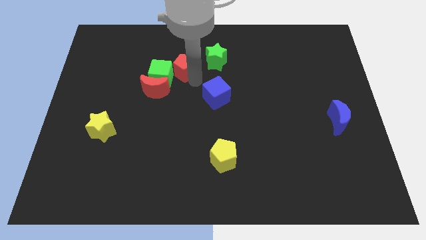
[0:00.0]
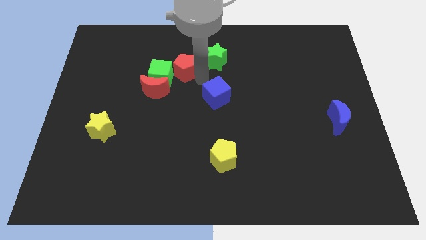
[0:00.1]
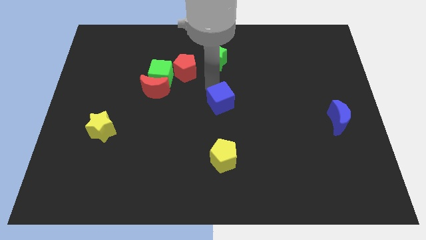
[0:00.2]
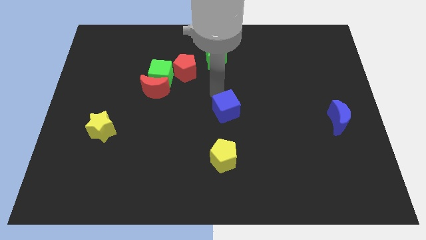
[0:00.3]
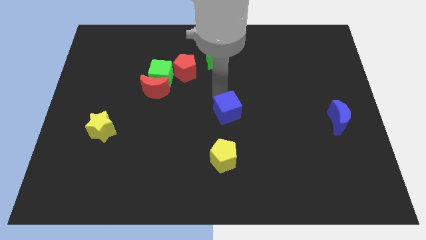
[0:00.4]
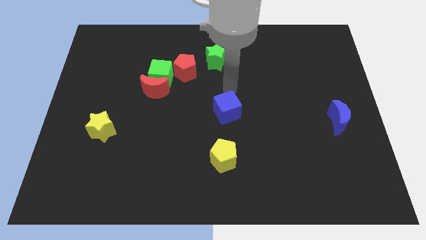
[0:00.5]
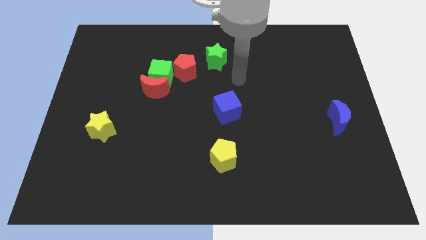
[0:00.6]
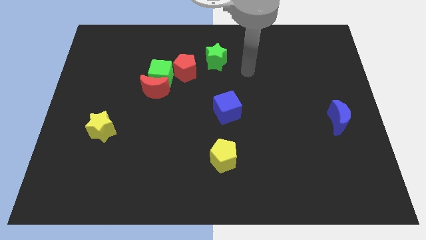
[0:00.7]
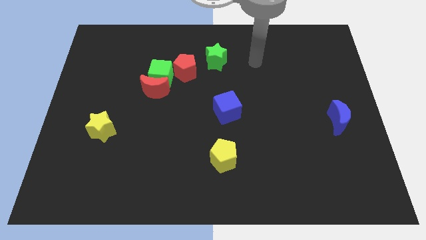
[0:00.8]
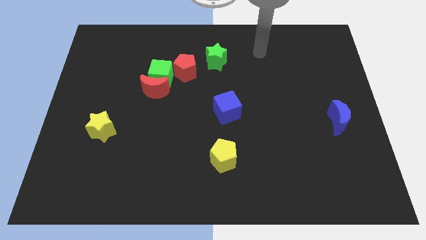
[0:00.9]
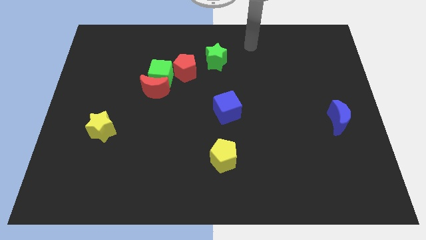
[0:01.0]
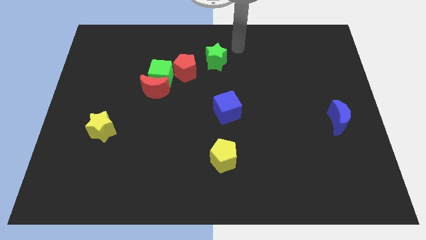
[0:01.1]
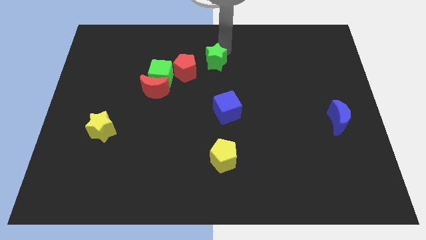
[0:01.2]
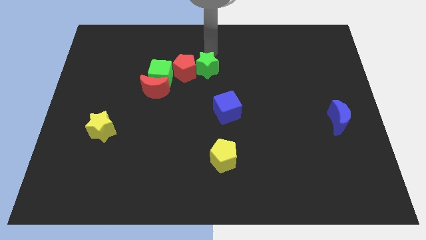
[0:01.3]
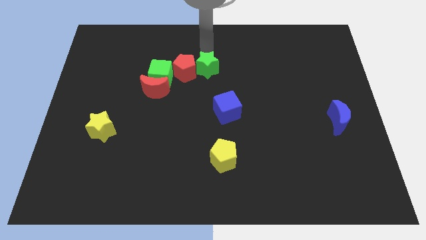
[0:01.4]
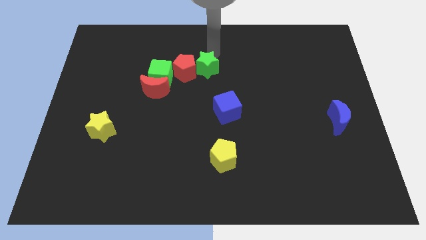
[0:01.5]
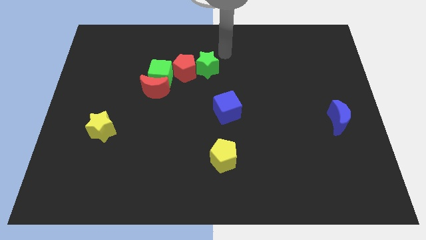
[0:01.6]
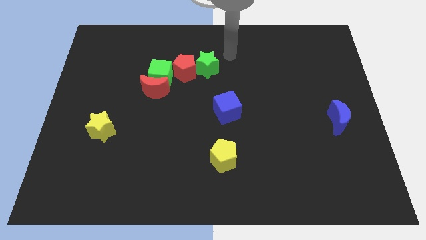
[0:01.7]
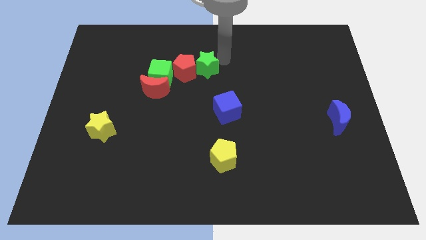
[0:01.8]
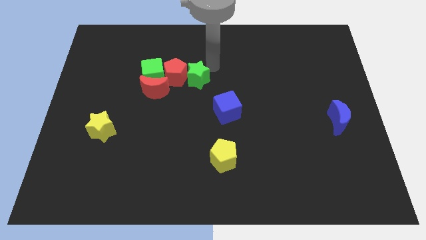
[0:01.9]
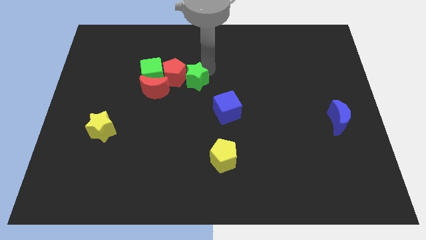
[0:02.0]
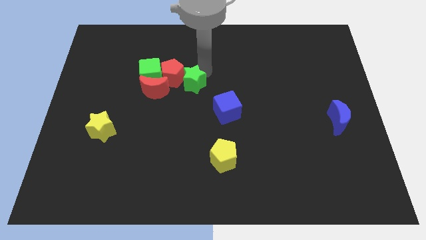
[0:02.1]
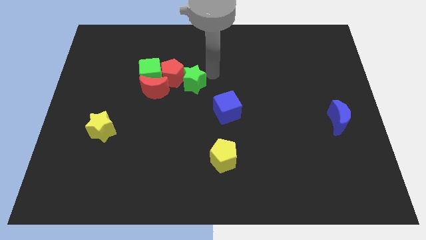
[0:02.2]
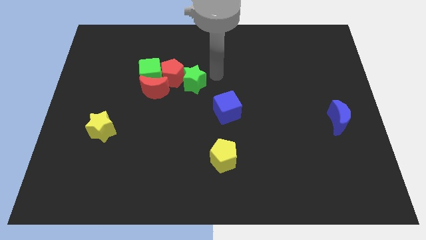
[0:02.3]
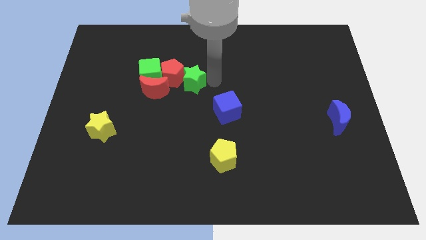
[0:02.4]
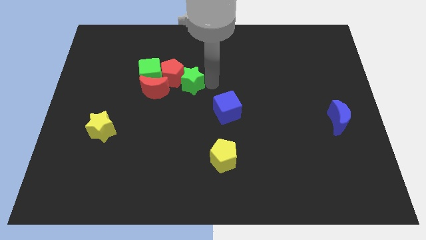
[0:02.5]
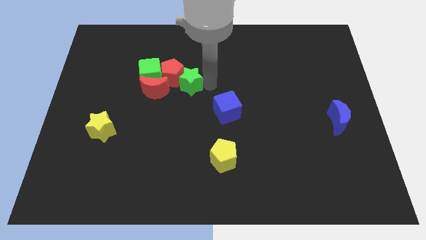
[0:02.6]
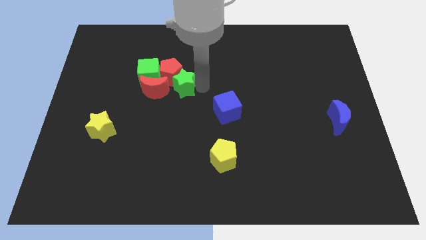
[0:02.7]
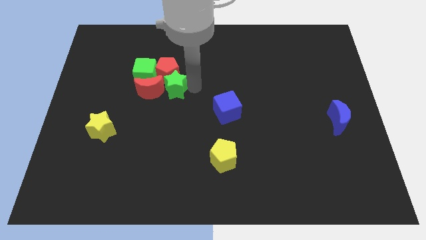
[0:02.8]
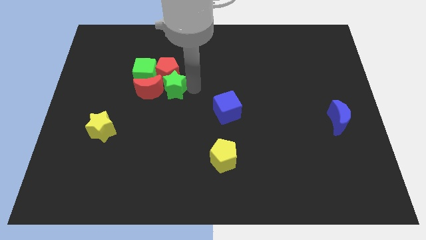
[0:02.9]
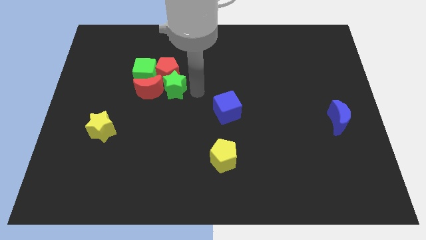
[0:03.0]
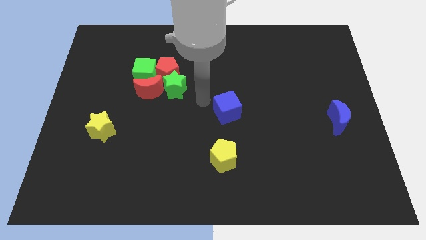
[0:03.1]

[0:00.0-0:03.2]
slide the green star into the group of blocks

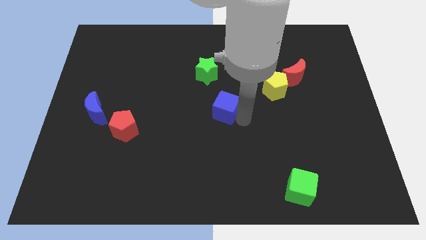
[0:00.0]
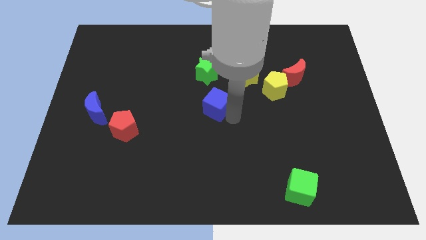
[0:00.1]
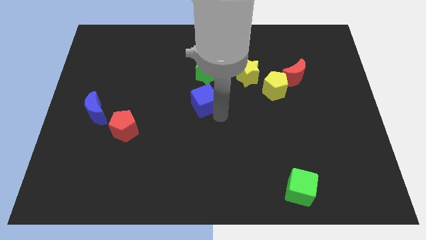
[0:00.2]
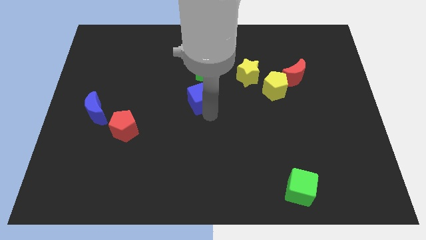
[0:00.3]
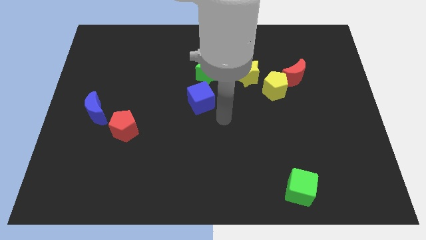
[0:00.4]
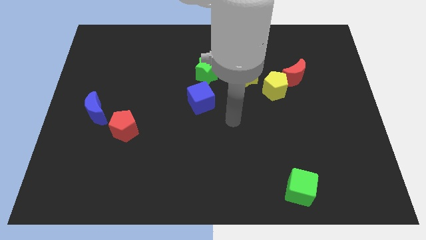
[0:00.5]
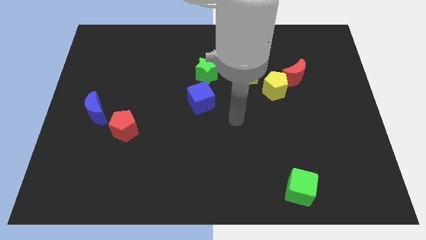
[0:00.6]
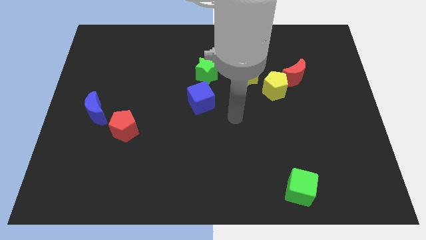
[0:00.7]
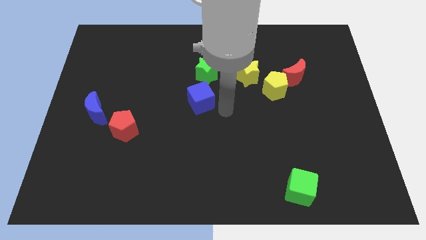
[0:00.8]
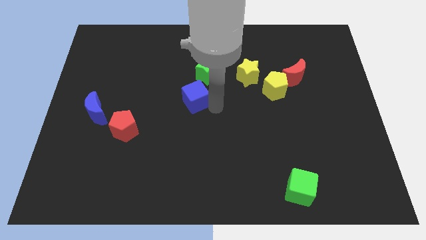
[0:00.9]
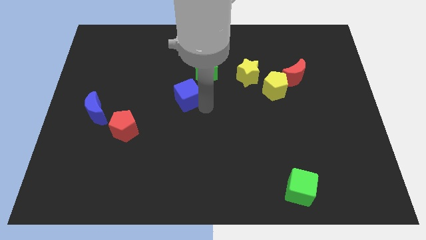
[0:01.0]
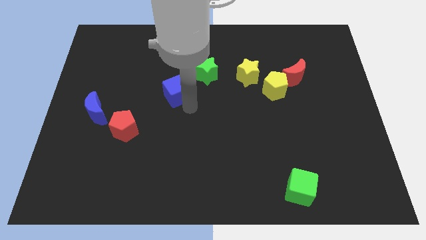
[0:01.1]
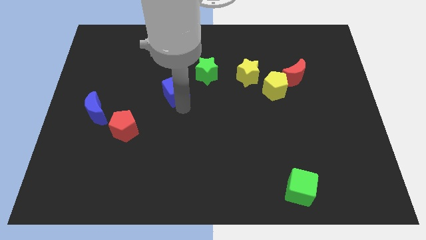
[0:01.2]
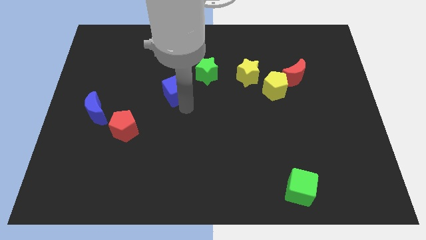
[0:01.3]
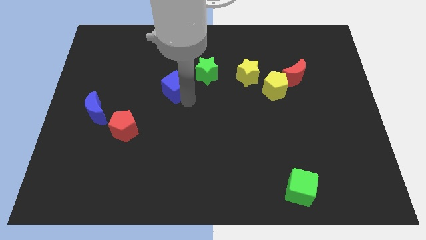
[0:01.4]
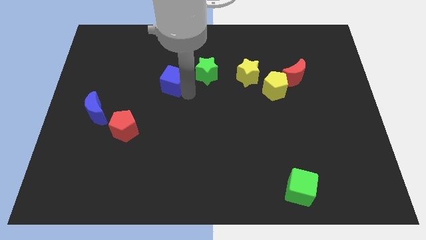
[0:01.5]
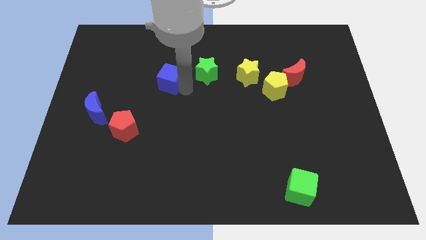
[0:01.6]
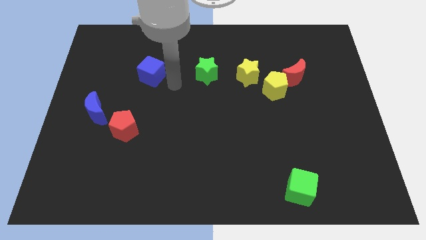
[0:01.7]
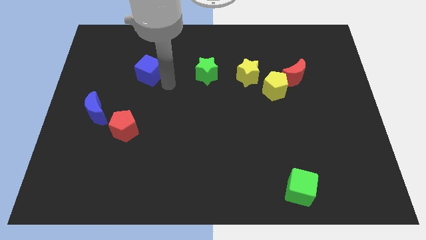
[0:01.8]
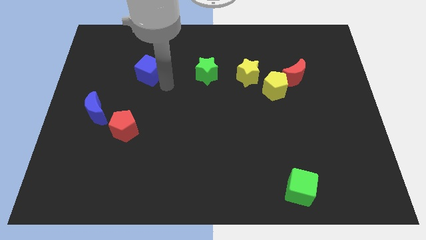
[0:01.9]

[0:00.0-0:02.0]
move the blue cube towards the left side of the star

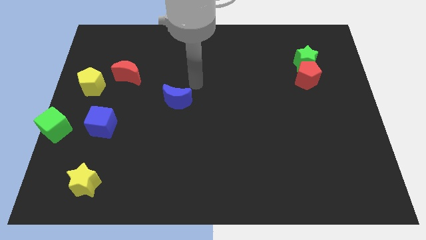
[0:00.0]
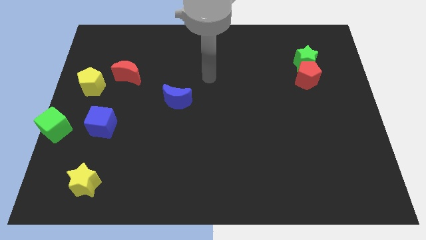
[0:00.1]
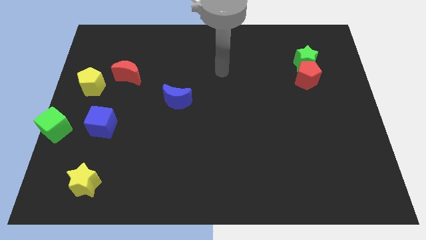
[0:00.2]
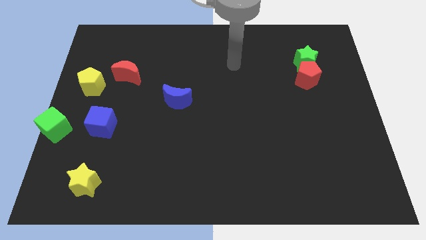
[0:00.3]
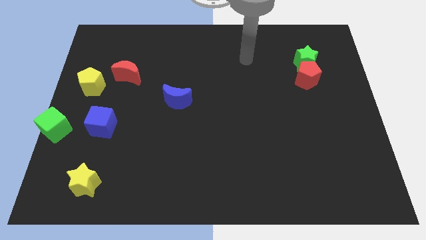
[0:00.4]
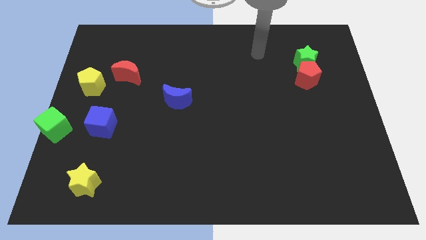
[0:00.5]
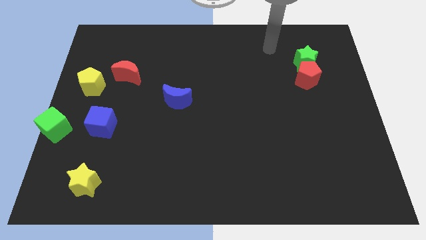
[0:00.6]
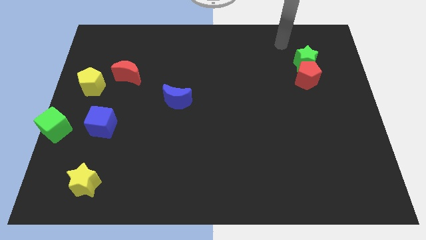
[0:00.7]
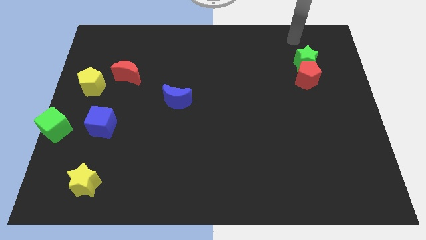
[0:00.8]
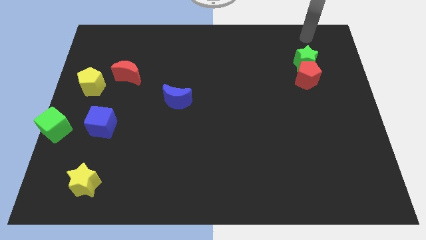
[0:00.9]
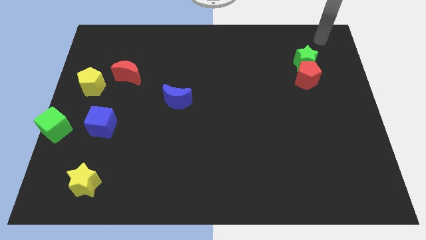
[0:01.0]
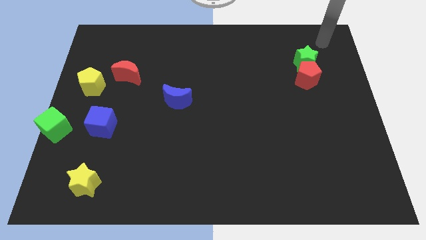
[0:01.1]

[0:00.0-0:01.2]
place your arm to the top right side of the green star

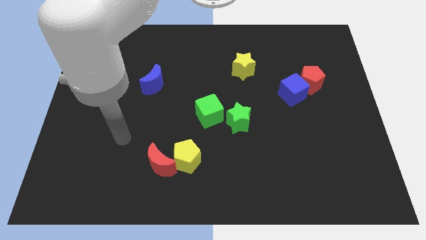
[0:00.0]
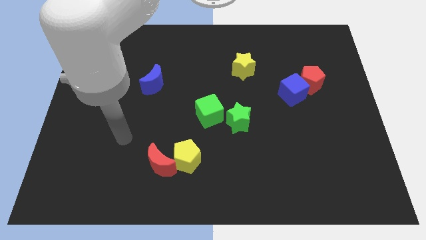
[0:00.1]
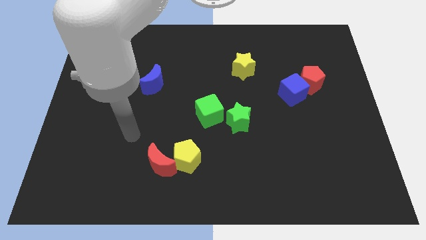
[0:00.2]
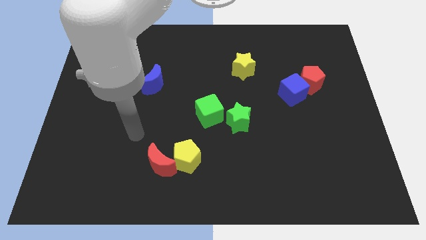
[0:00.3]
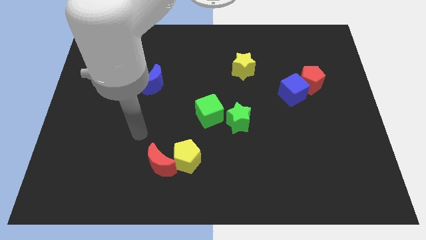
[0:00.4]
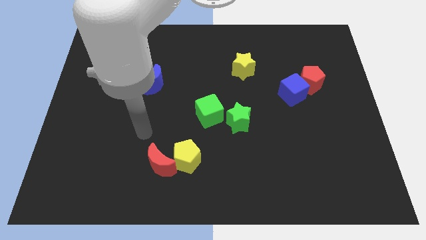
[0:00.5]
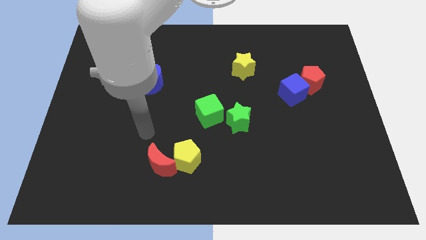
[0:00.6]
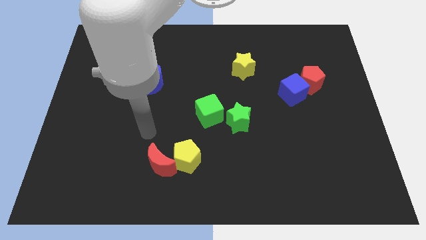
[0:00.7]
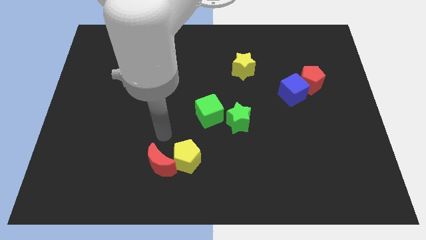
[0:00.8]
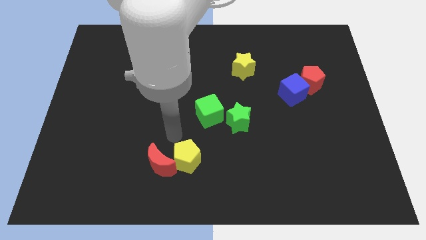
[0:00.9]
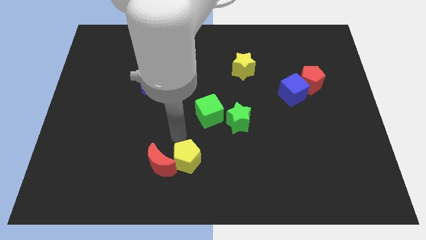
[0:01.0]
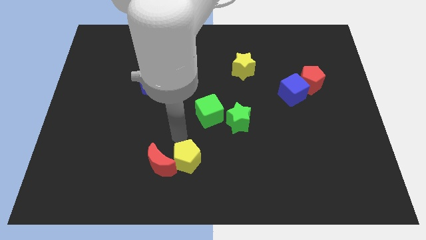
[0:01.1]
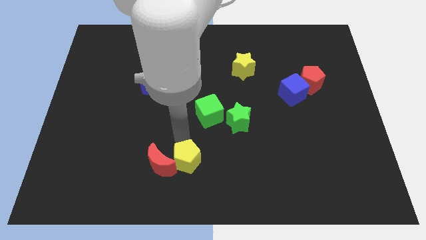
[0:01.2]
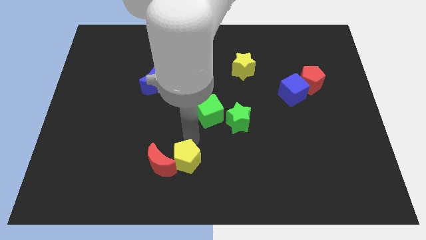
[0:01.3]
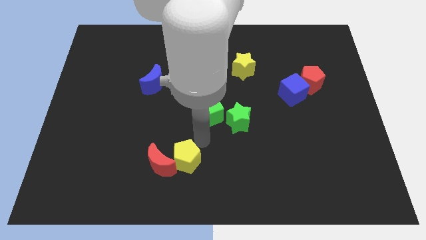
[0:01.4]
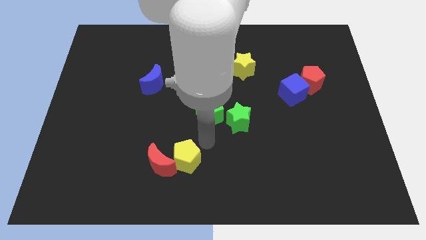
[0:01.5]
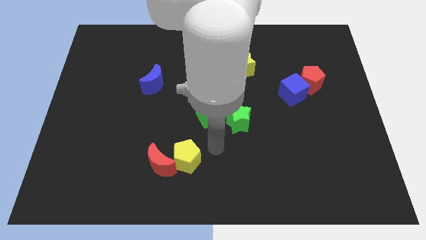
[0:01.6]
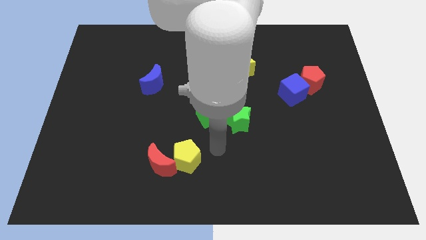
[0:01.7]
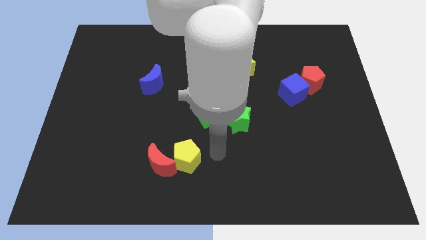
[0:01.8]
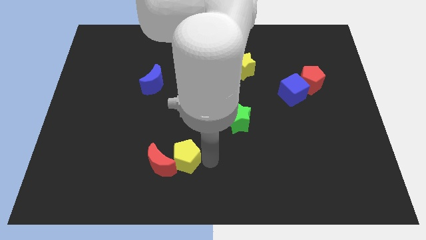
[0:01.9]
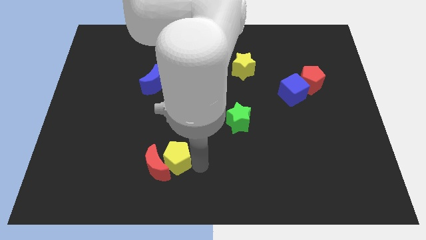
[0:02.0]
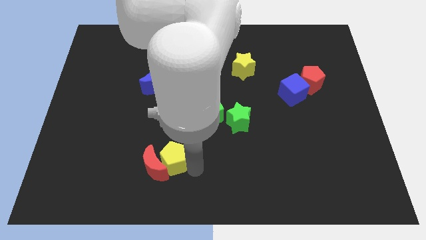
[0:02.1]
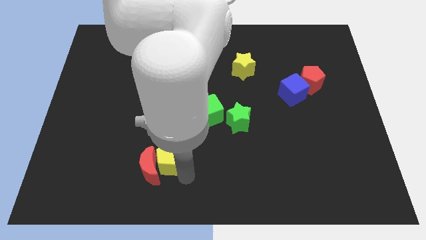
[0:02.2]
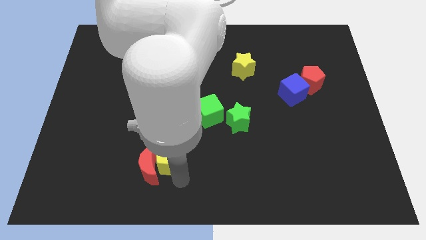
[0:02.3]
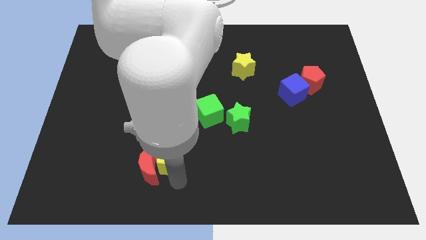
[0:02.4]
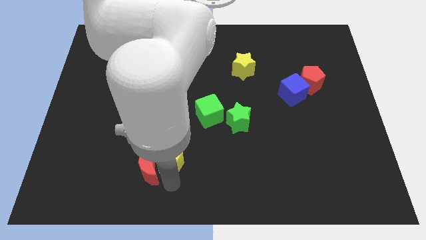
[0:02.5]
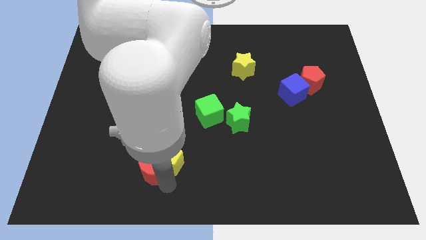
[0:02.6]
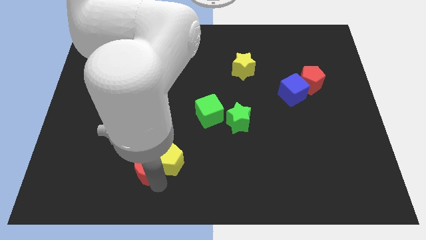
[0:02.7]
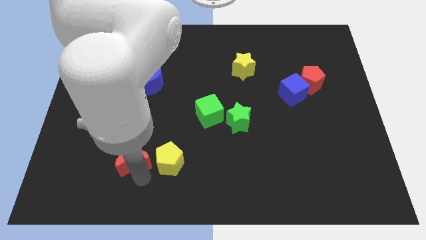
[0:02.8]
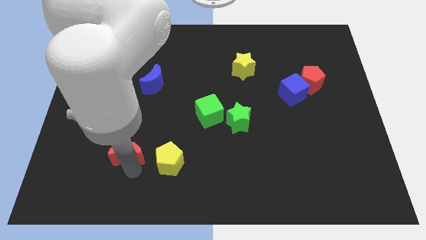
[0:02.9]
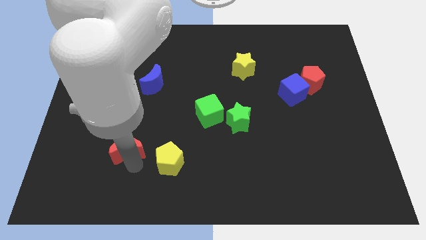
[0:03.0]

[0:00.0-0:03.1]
separate red crescent from the yellow pentagon
